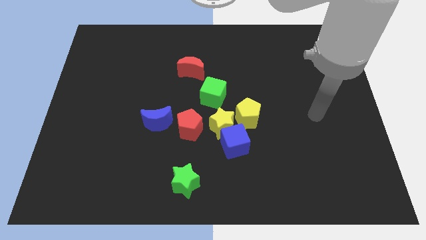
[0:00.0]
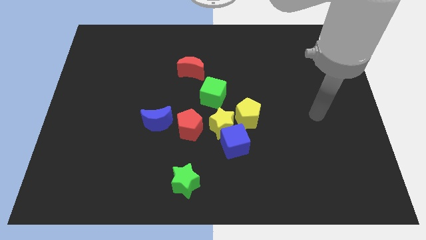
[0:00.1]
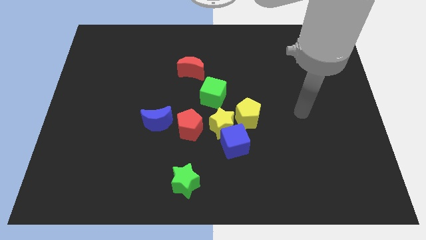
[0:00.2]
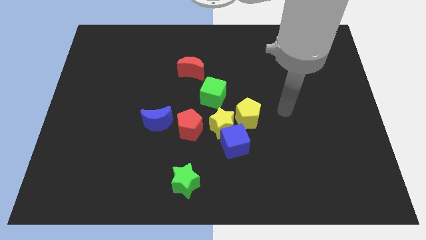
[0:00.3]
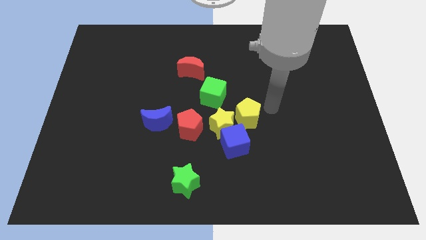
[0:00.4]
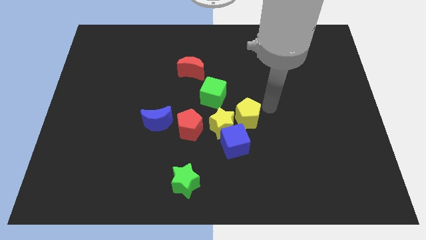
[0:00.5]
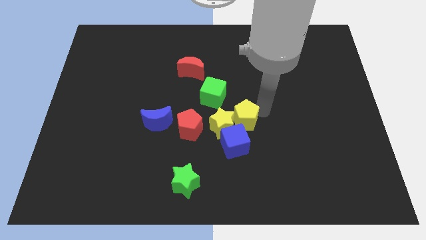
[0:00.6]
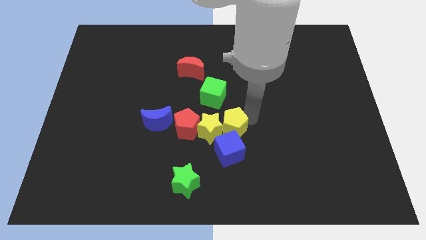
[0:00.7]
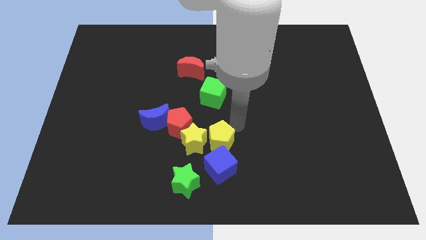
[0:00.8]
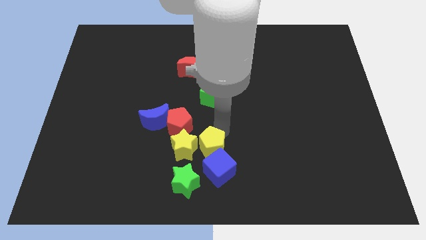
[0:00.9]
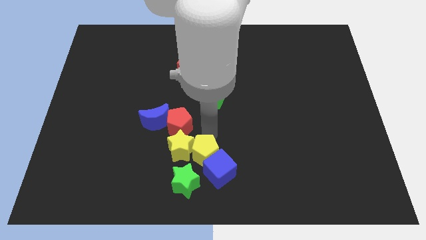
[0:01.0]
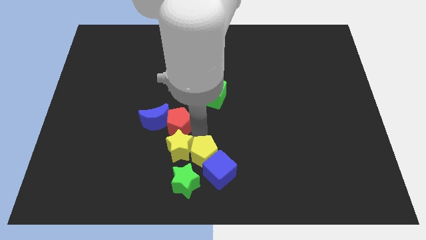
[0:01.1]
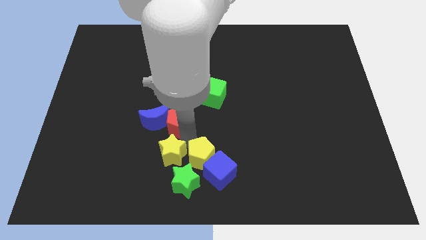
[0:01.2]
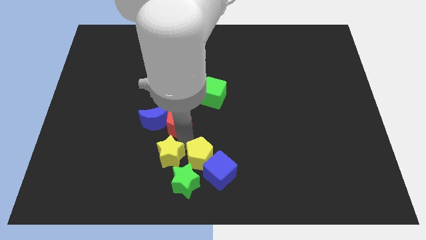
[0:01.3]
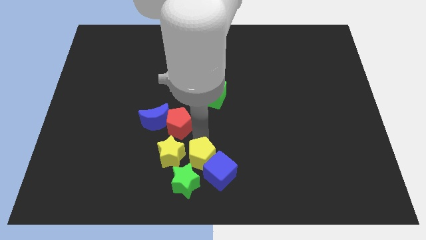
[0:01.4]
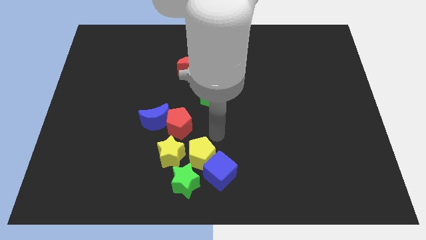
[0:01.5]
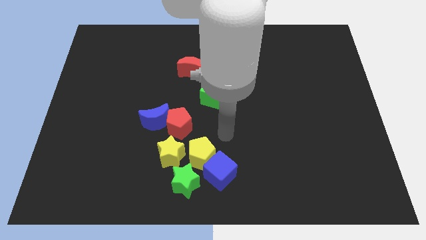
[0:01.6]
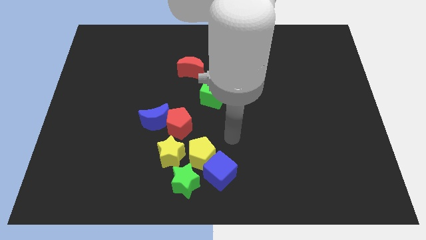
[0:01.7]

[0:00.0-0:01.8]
move the yellow pentagon to the bottom left side diagonally

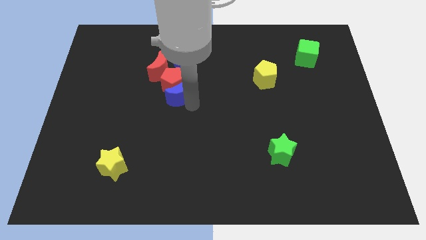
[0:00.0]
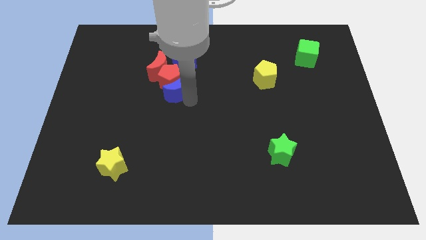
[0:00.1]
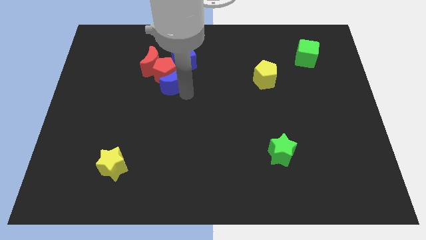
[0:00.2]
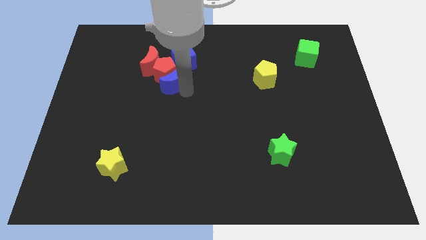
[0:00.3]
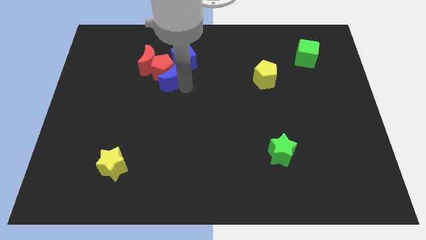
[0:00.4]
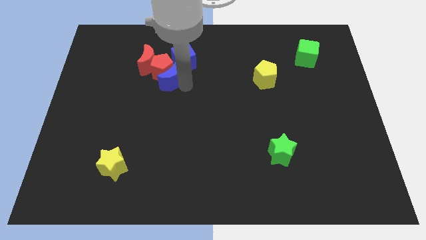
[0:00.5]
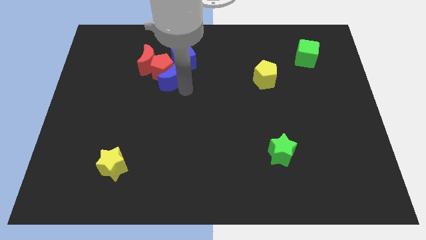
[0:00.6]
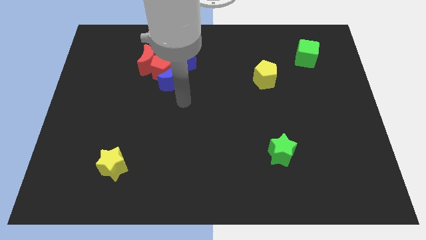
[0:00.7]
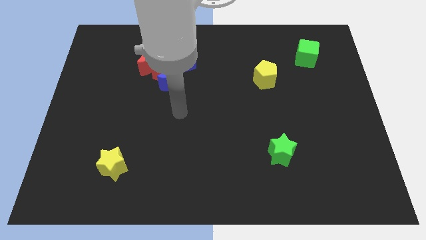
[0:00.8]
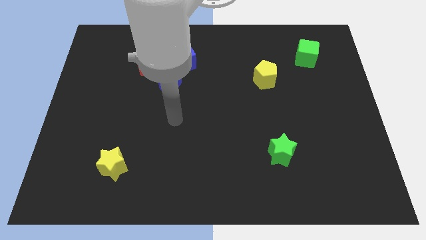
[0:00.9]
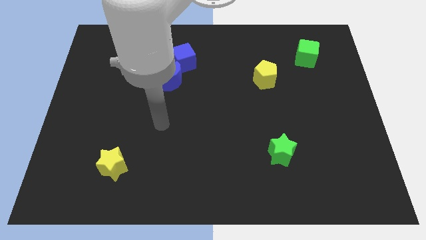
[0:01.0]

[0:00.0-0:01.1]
push the blue crescent and the red pentagon into the red moon

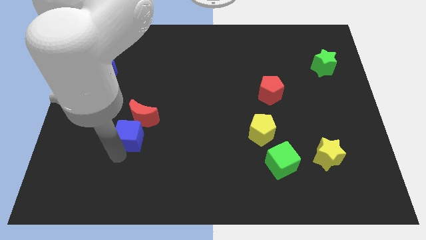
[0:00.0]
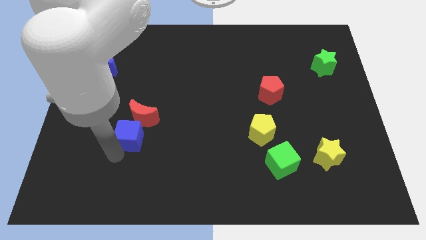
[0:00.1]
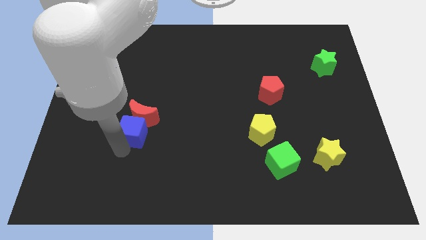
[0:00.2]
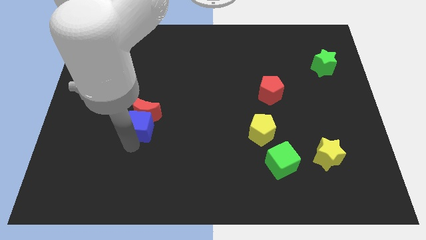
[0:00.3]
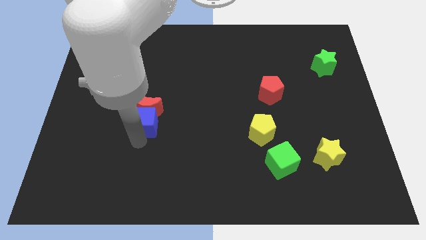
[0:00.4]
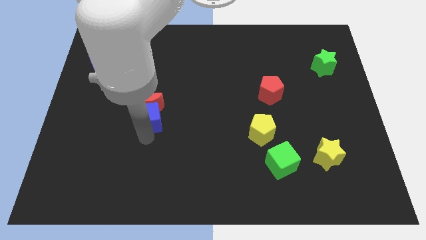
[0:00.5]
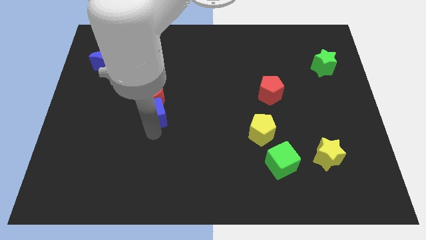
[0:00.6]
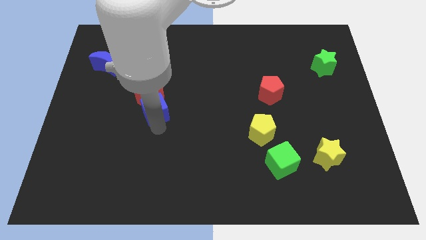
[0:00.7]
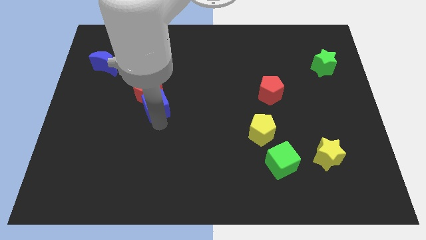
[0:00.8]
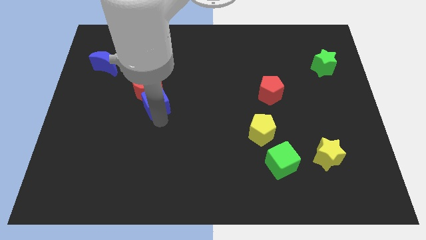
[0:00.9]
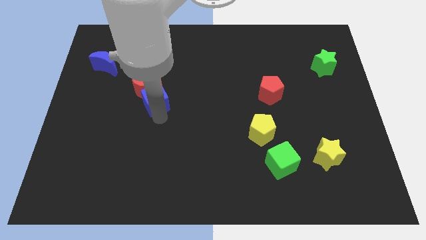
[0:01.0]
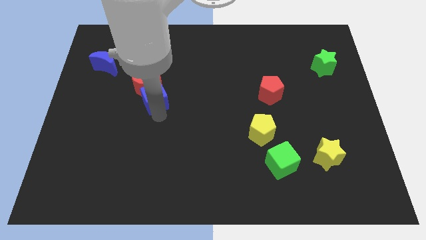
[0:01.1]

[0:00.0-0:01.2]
slide the red moon and blue cube towards the top

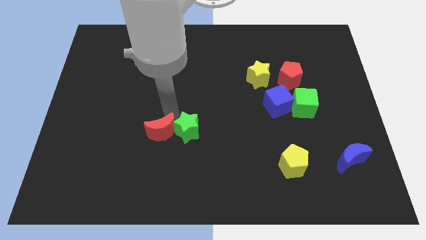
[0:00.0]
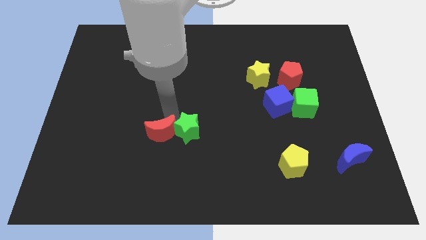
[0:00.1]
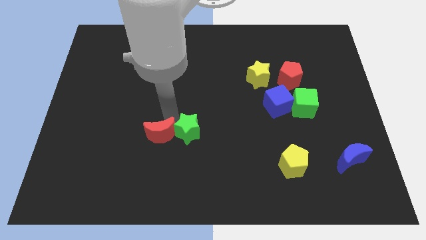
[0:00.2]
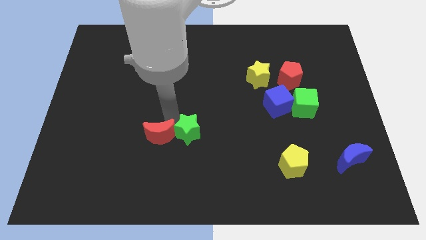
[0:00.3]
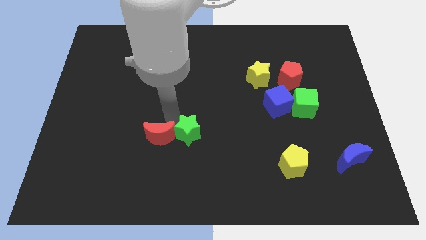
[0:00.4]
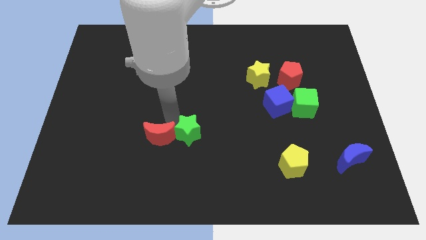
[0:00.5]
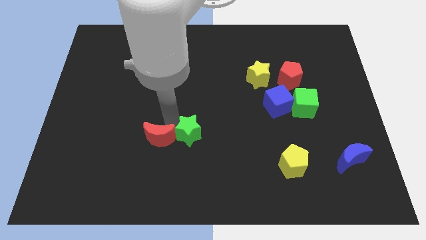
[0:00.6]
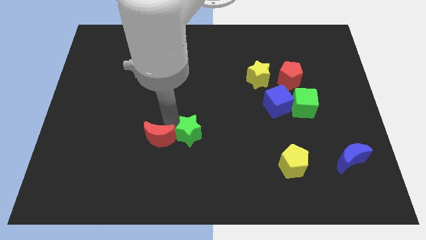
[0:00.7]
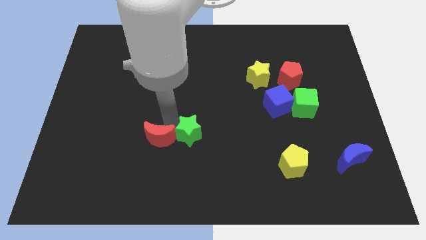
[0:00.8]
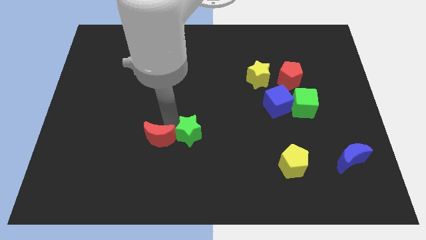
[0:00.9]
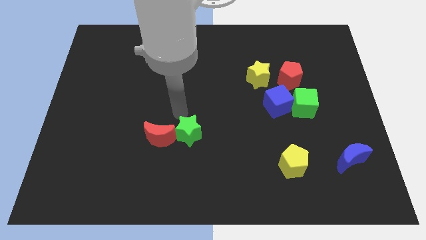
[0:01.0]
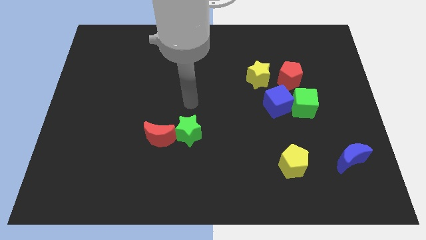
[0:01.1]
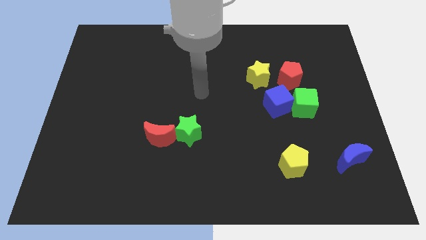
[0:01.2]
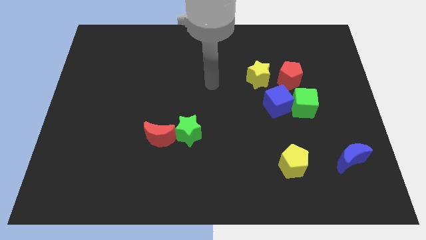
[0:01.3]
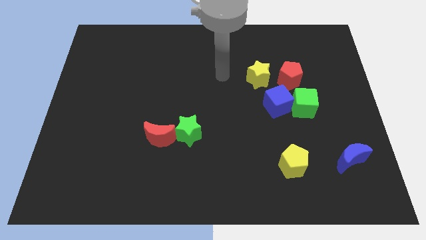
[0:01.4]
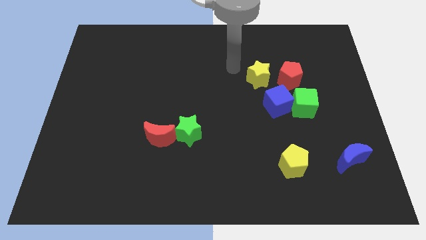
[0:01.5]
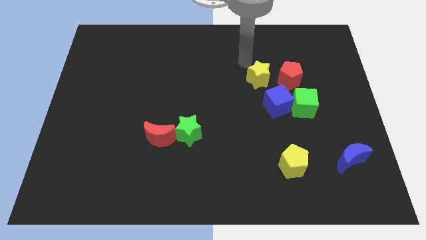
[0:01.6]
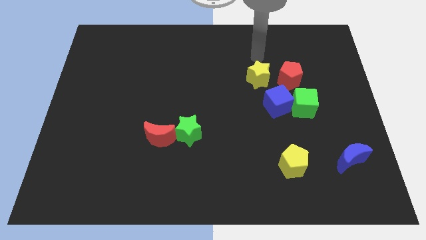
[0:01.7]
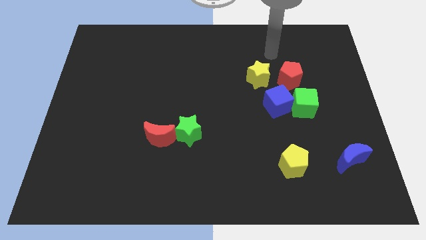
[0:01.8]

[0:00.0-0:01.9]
push red moon with green star

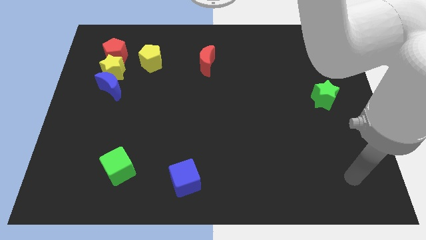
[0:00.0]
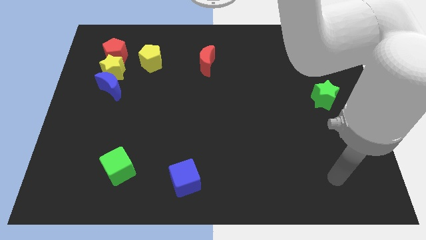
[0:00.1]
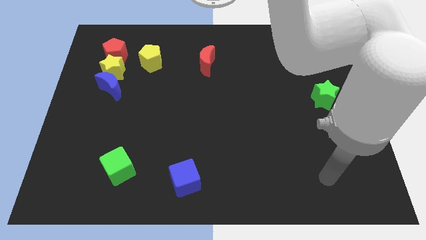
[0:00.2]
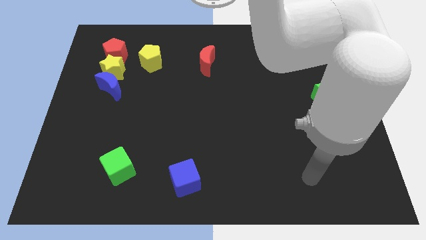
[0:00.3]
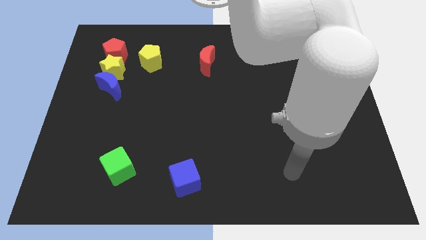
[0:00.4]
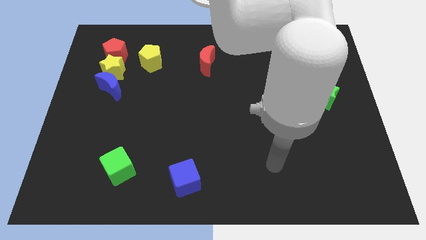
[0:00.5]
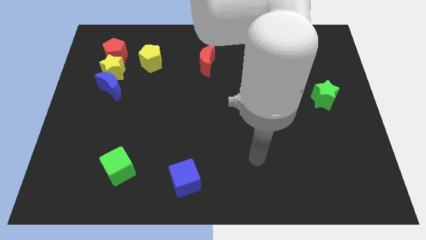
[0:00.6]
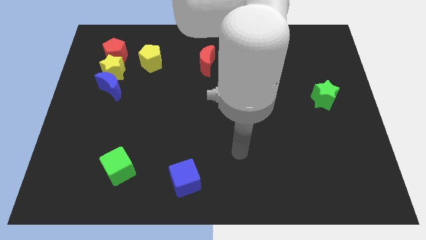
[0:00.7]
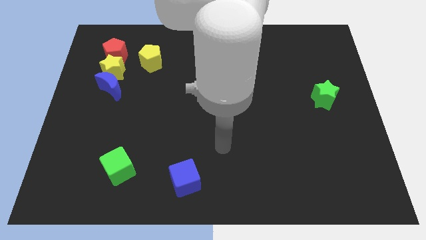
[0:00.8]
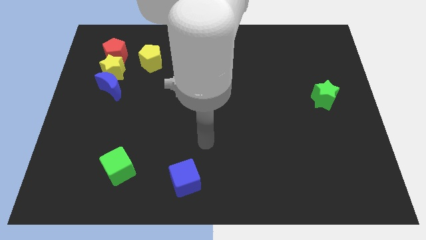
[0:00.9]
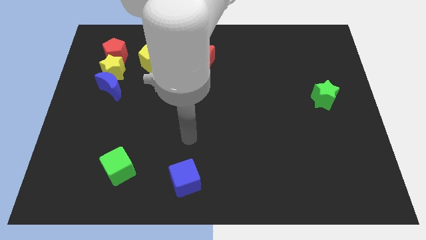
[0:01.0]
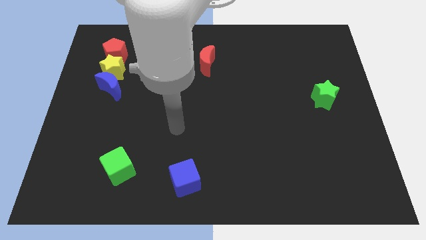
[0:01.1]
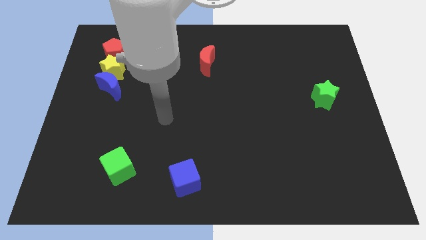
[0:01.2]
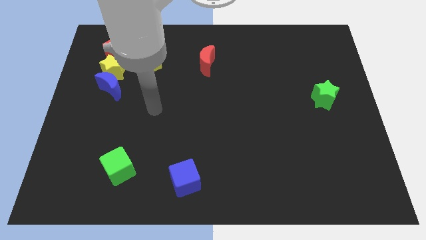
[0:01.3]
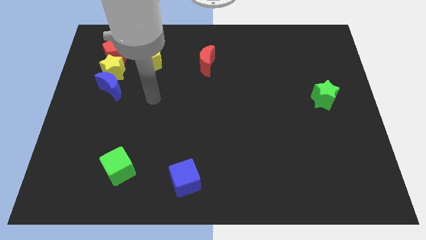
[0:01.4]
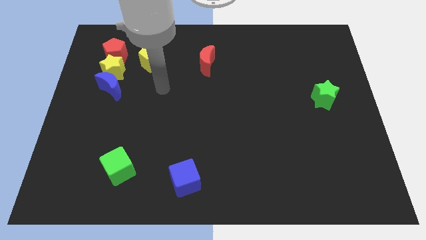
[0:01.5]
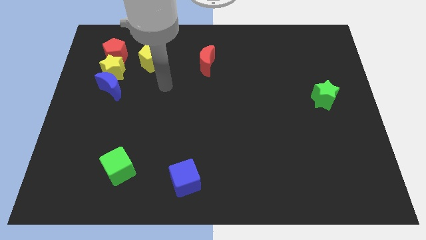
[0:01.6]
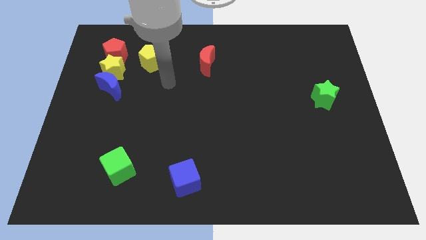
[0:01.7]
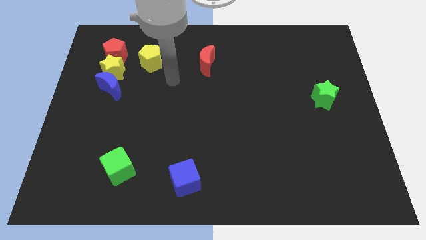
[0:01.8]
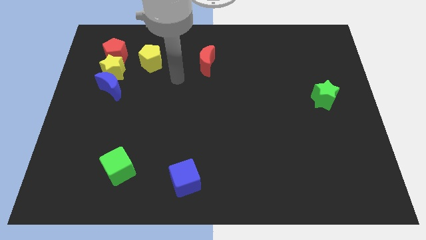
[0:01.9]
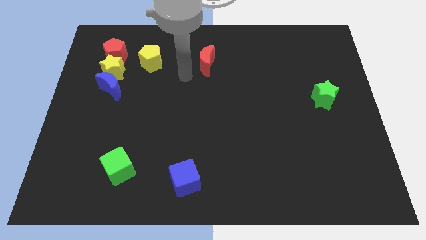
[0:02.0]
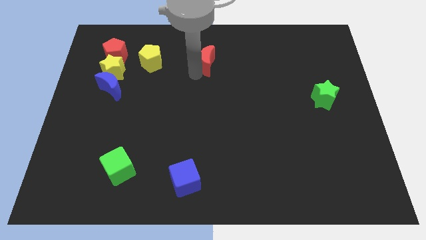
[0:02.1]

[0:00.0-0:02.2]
move your arm to the bottom left of the red crescent

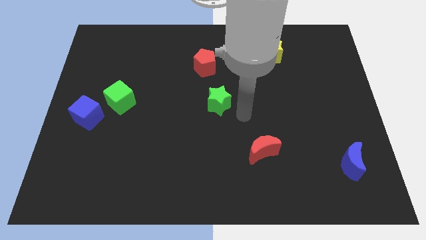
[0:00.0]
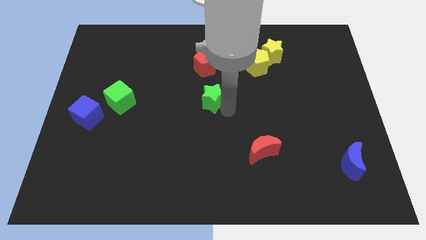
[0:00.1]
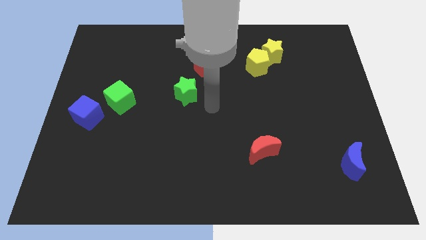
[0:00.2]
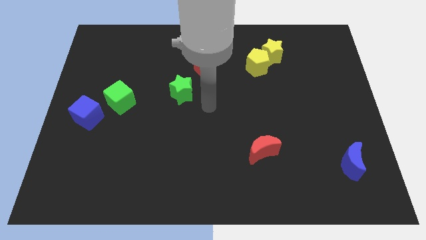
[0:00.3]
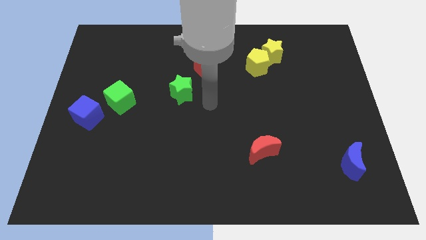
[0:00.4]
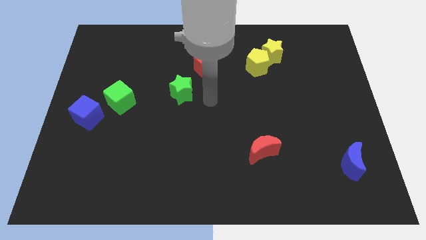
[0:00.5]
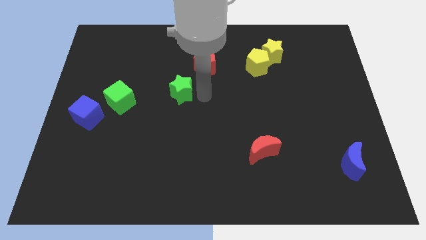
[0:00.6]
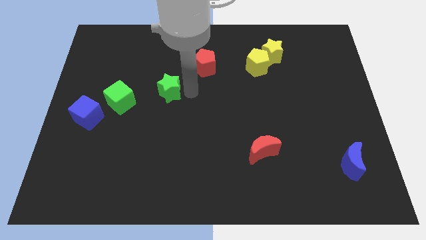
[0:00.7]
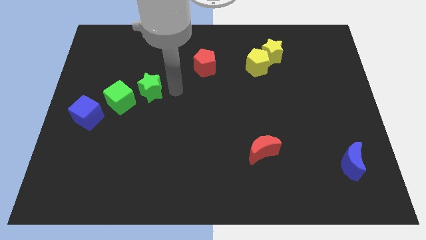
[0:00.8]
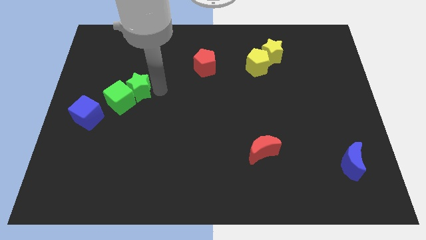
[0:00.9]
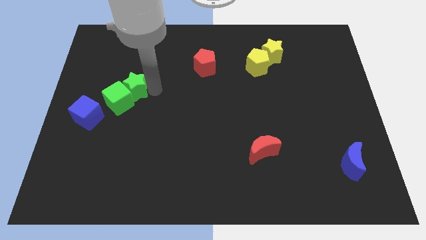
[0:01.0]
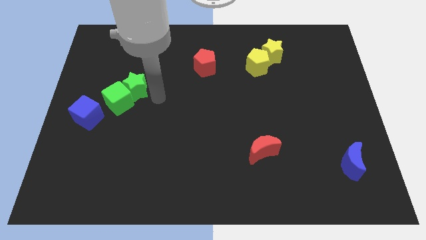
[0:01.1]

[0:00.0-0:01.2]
move green star into the green cube
